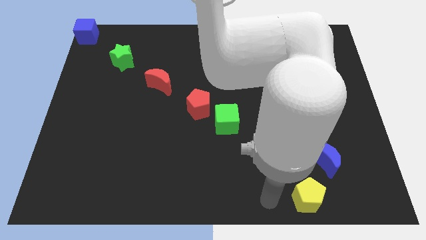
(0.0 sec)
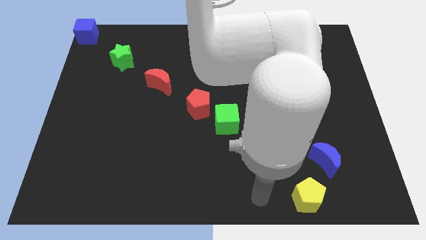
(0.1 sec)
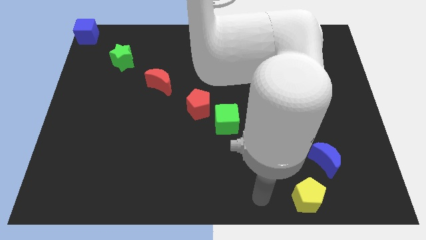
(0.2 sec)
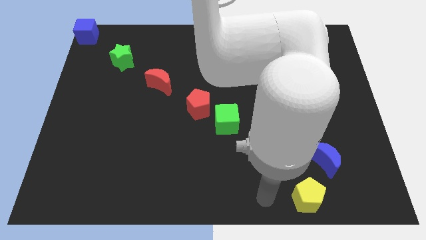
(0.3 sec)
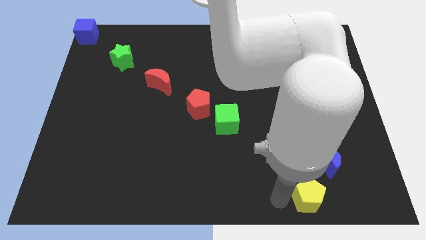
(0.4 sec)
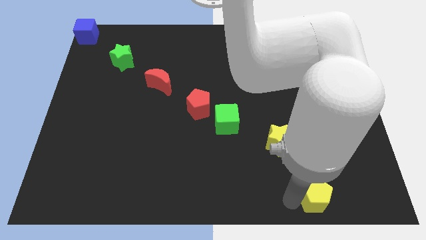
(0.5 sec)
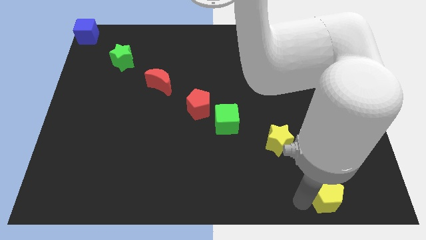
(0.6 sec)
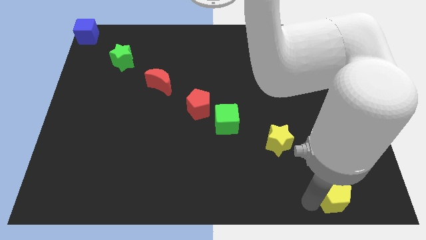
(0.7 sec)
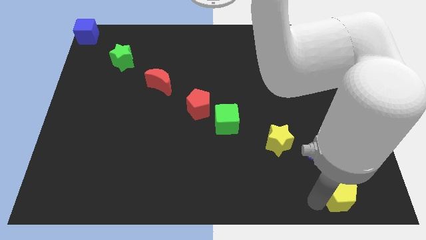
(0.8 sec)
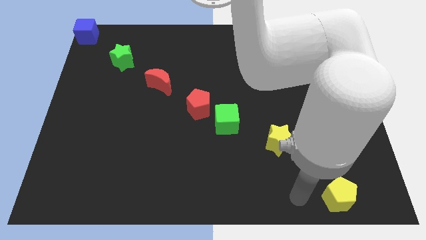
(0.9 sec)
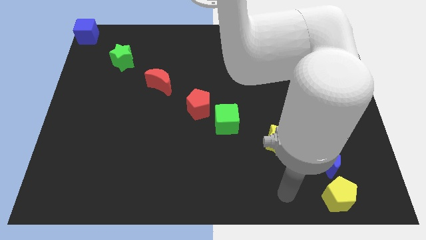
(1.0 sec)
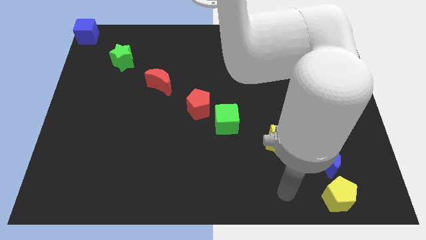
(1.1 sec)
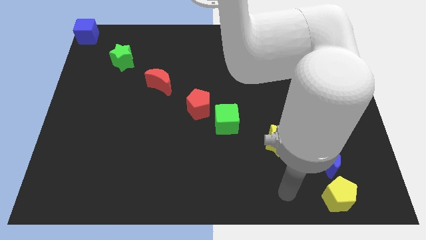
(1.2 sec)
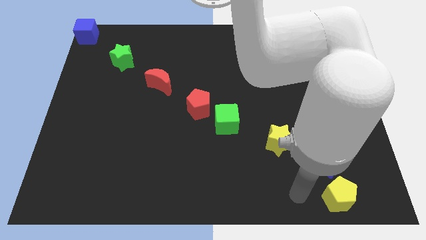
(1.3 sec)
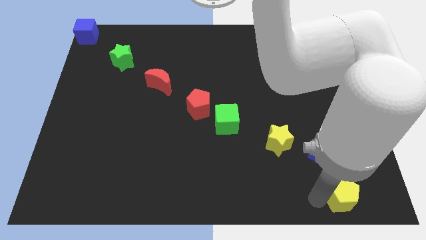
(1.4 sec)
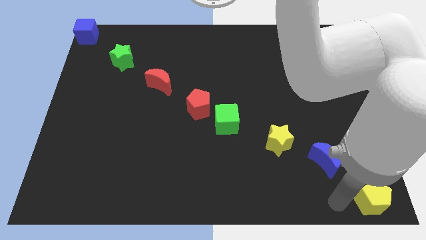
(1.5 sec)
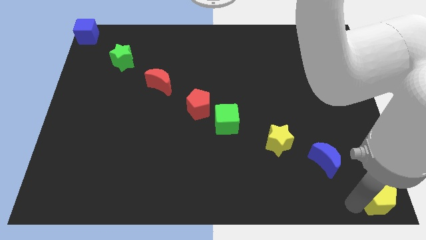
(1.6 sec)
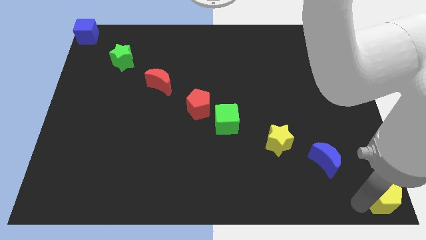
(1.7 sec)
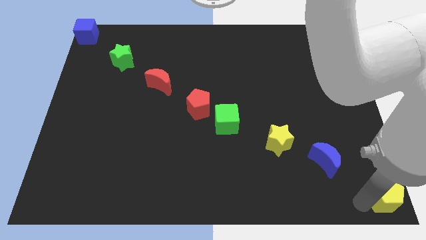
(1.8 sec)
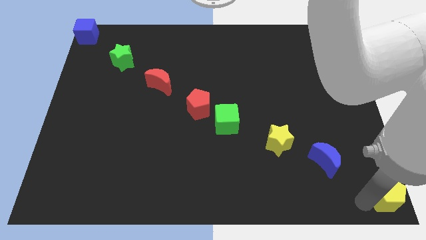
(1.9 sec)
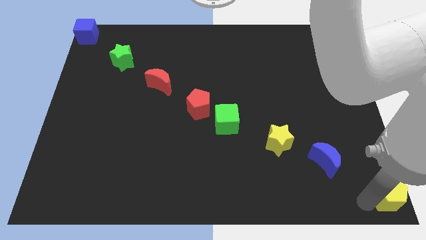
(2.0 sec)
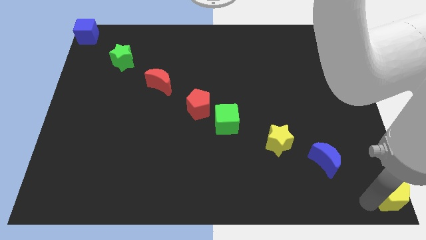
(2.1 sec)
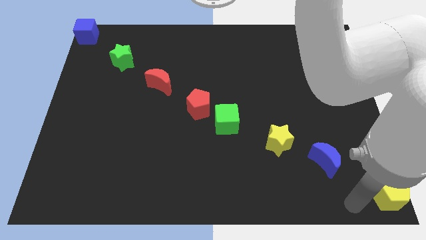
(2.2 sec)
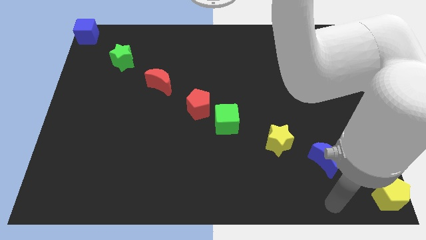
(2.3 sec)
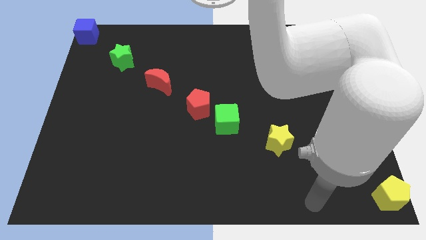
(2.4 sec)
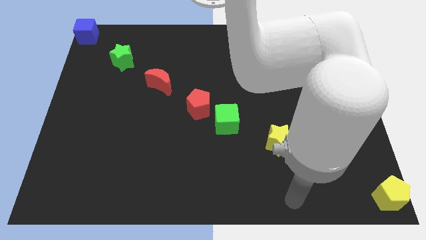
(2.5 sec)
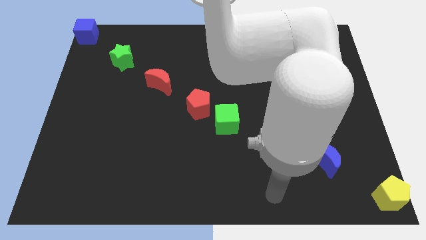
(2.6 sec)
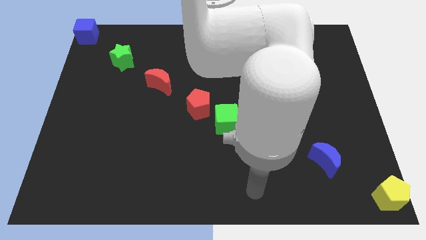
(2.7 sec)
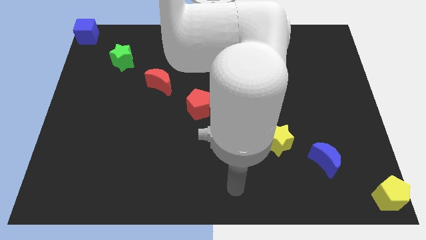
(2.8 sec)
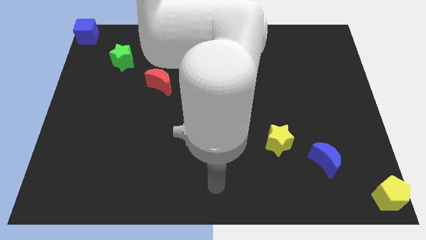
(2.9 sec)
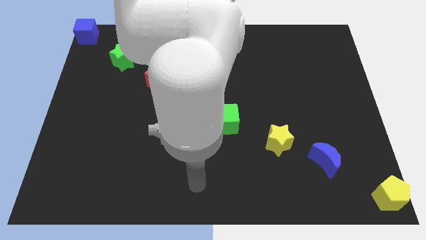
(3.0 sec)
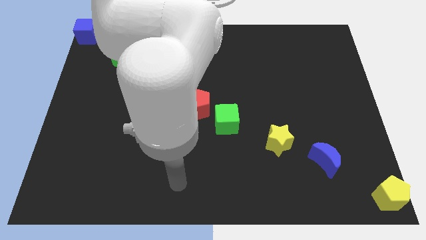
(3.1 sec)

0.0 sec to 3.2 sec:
move the yellow pentagon to the bottom right corner of the board

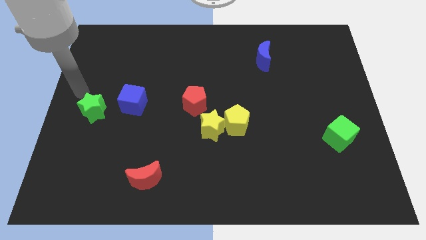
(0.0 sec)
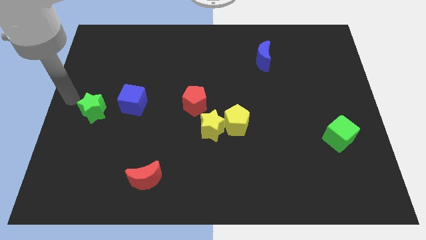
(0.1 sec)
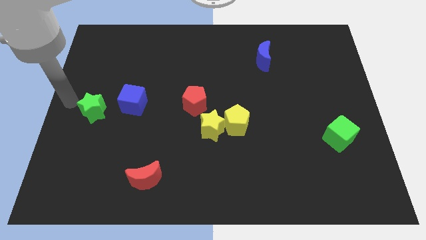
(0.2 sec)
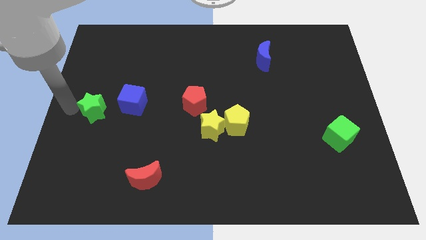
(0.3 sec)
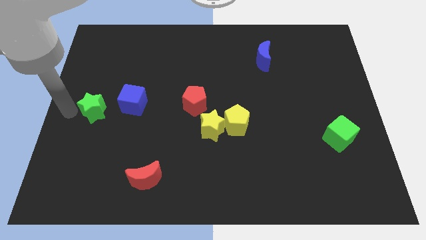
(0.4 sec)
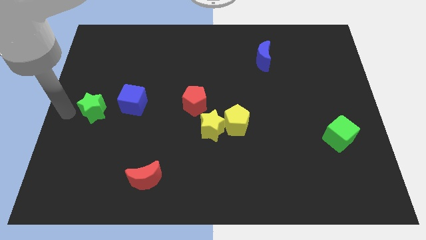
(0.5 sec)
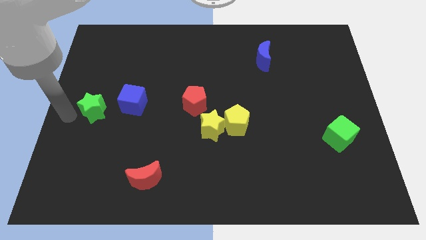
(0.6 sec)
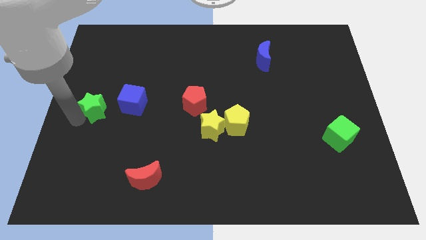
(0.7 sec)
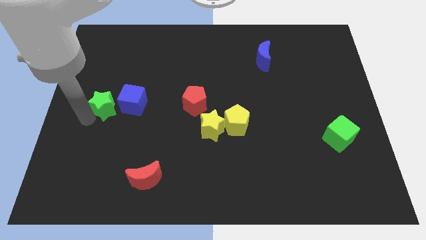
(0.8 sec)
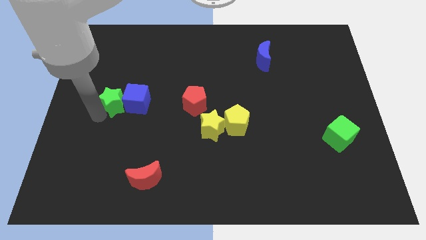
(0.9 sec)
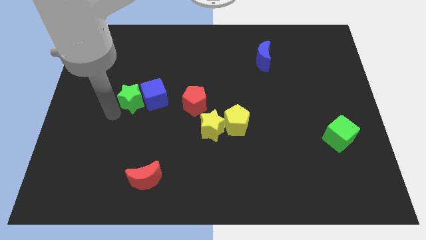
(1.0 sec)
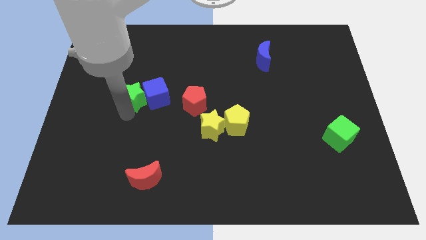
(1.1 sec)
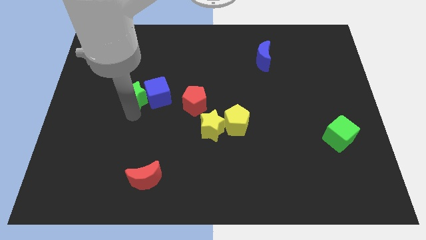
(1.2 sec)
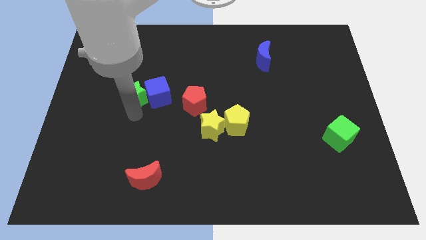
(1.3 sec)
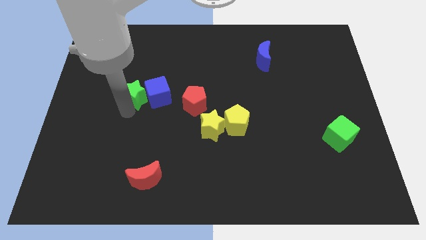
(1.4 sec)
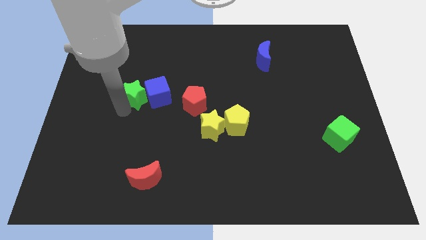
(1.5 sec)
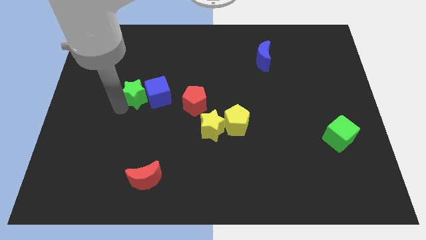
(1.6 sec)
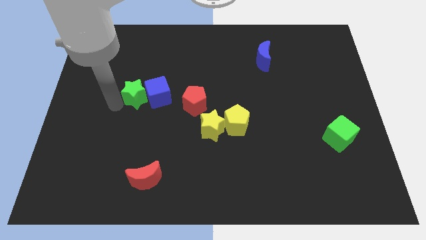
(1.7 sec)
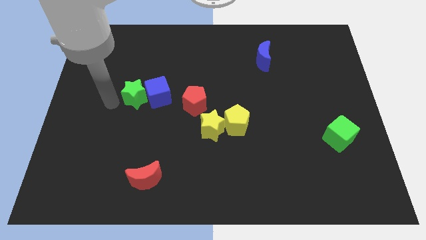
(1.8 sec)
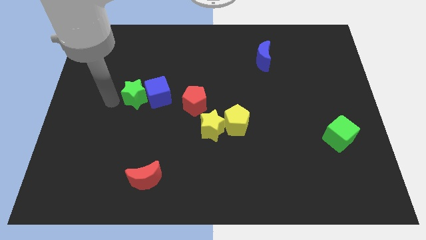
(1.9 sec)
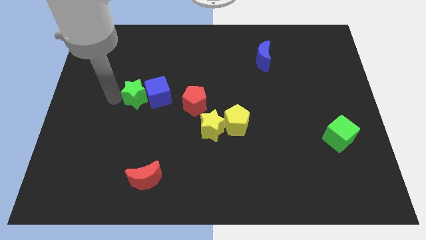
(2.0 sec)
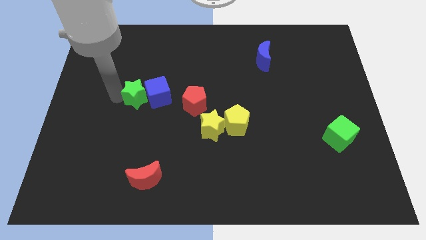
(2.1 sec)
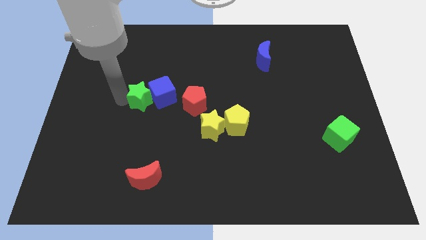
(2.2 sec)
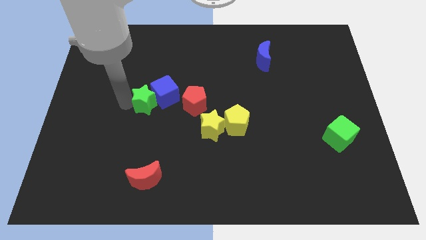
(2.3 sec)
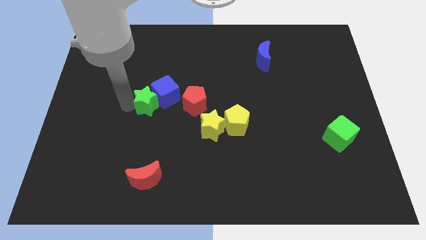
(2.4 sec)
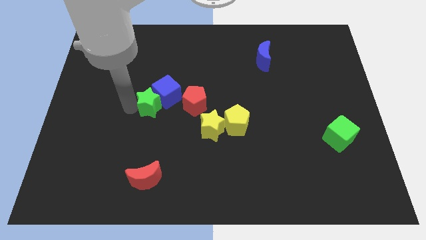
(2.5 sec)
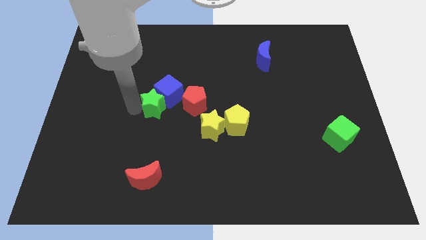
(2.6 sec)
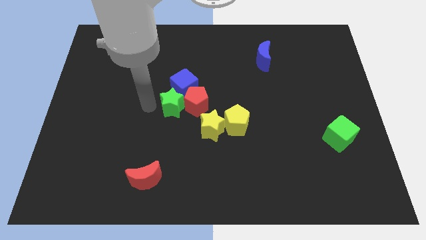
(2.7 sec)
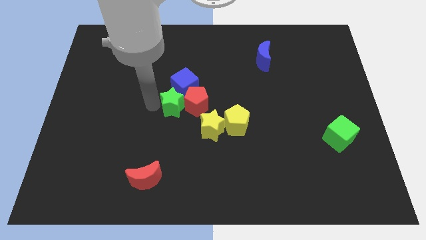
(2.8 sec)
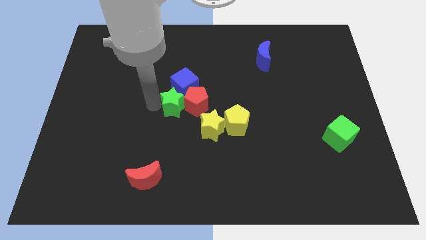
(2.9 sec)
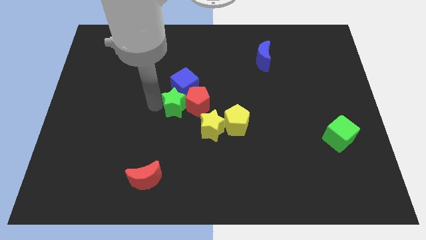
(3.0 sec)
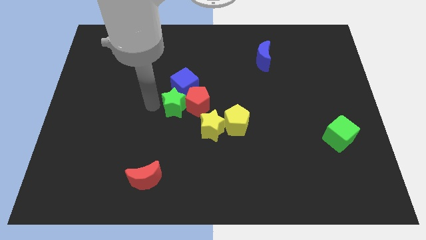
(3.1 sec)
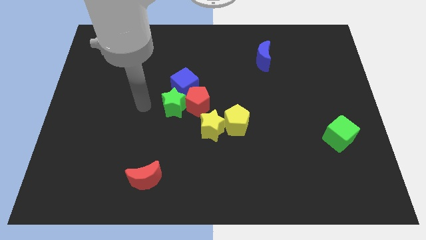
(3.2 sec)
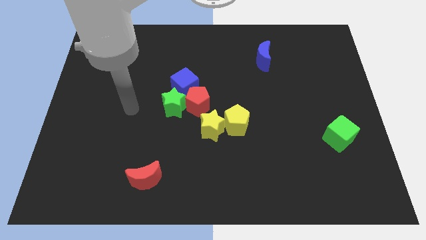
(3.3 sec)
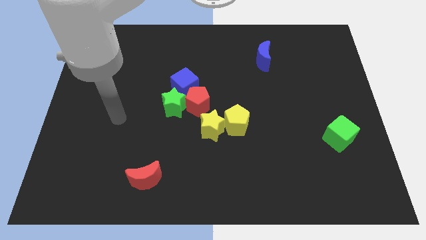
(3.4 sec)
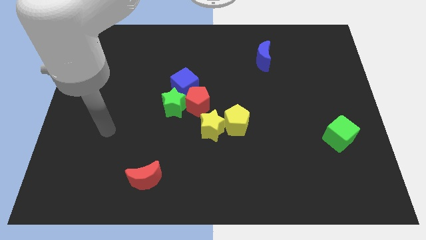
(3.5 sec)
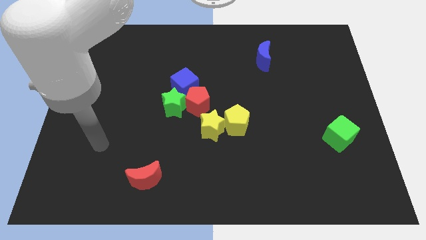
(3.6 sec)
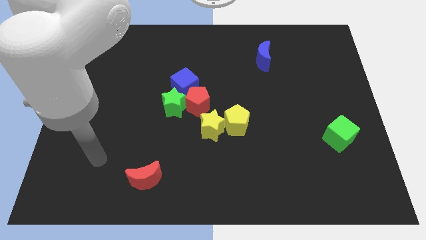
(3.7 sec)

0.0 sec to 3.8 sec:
adjust the green star blue cube and red pentagon to form a group of blocks

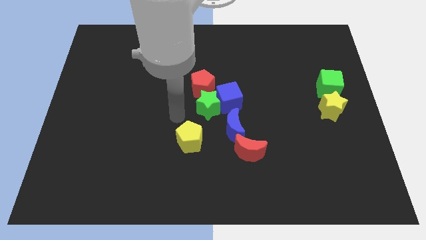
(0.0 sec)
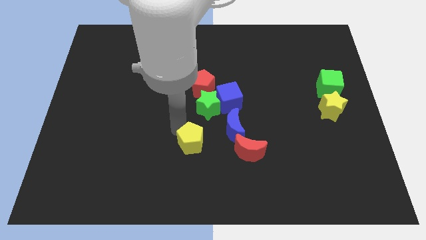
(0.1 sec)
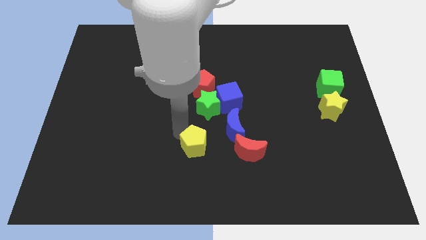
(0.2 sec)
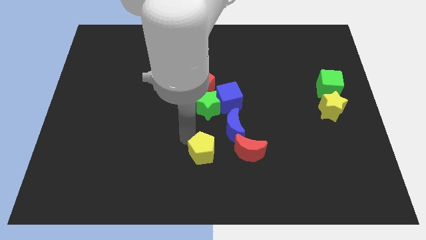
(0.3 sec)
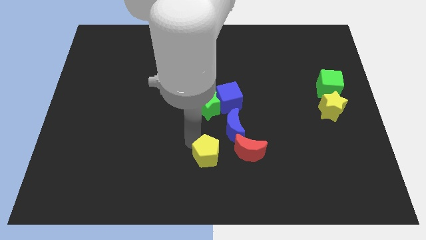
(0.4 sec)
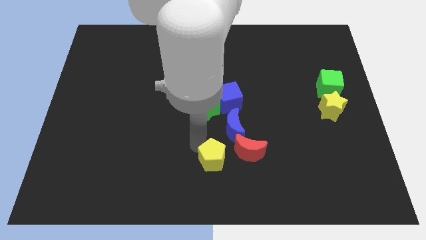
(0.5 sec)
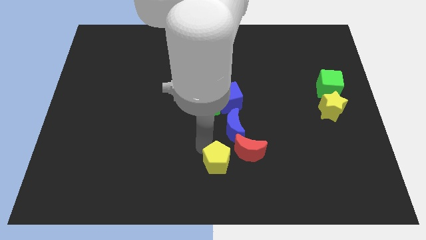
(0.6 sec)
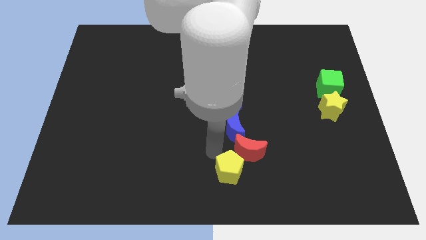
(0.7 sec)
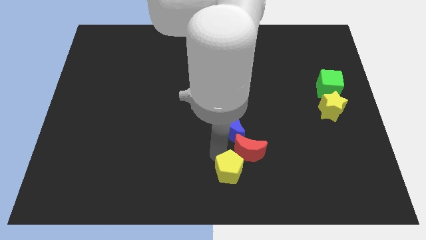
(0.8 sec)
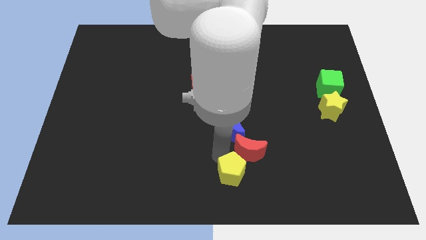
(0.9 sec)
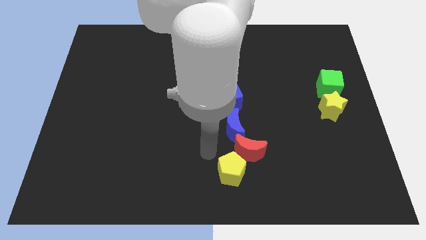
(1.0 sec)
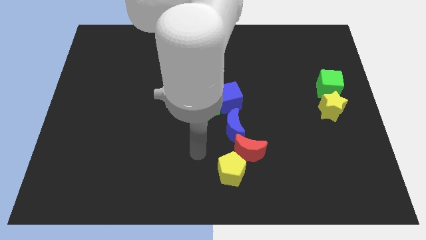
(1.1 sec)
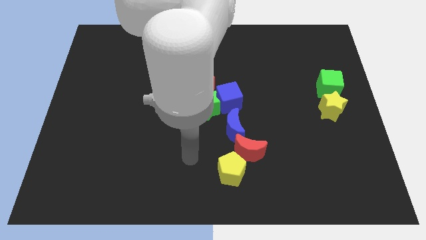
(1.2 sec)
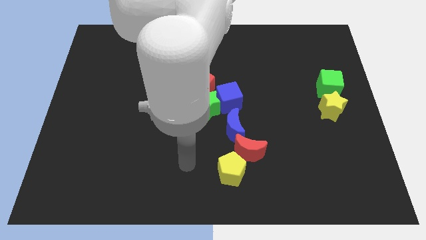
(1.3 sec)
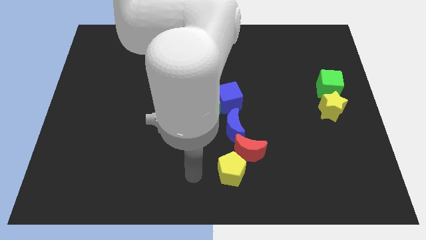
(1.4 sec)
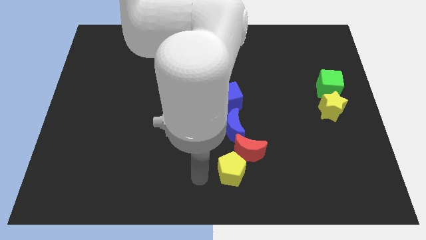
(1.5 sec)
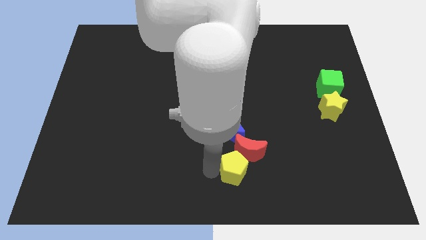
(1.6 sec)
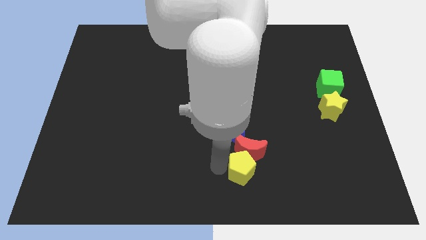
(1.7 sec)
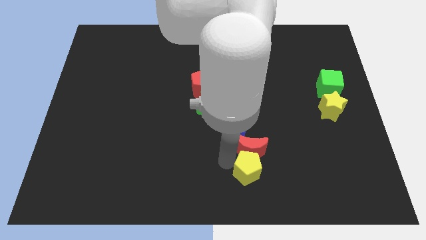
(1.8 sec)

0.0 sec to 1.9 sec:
place the yellow pentagon at the bottom of the red crescent
